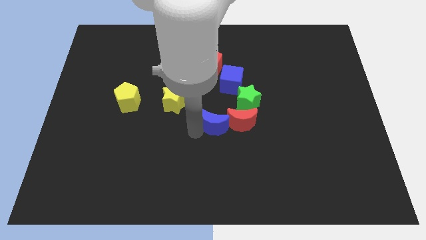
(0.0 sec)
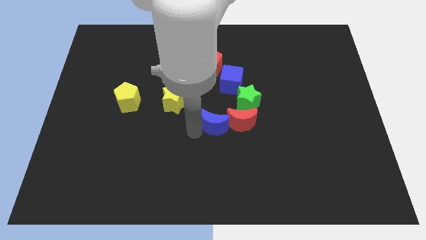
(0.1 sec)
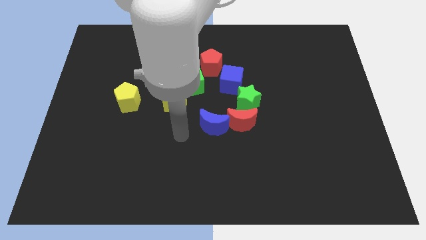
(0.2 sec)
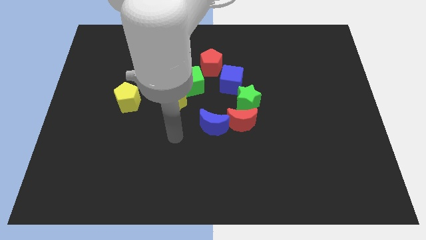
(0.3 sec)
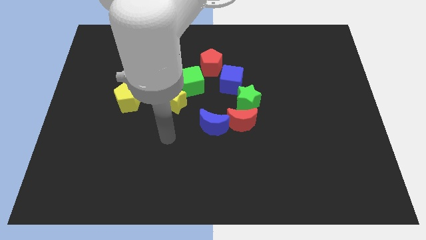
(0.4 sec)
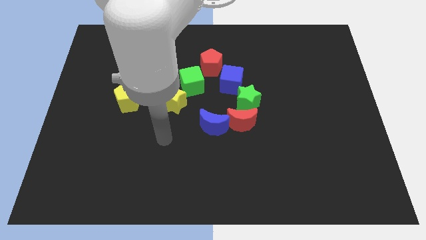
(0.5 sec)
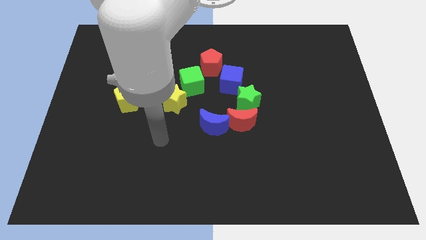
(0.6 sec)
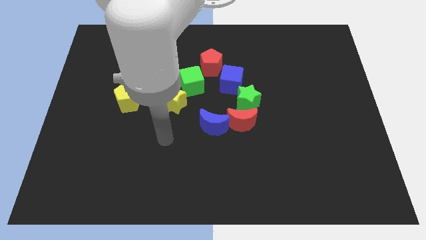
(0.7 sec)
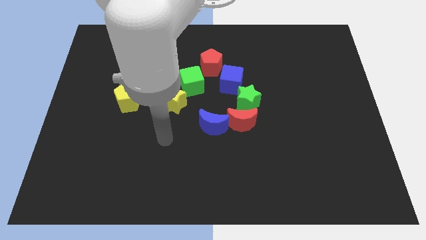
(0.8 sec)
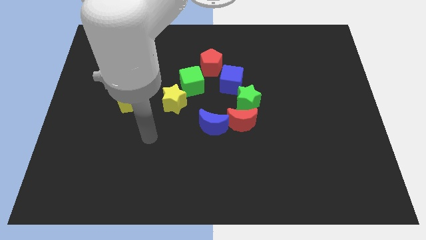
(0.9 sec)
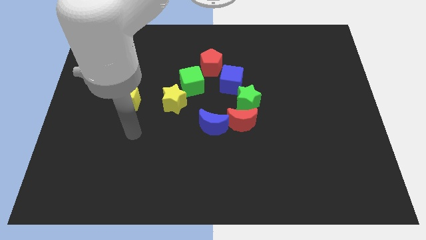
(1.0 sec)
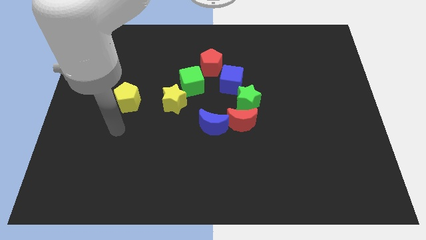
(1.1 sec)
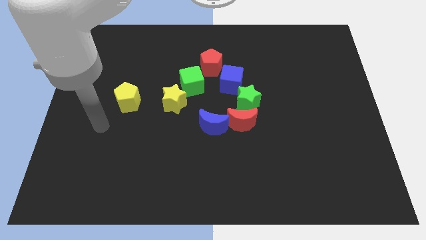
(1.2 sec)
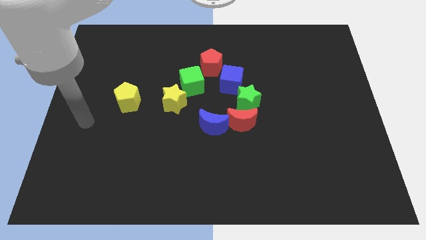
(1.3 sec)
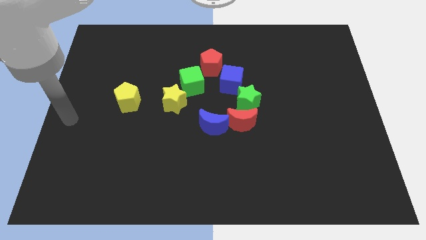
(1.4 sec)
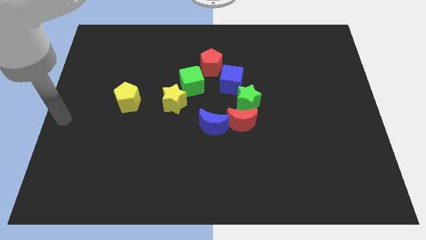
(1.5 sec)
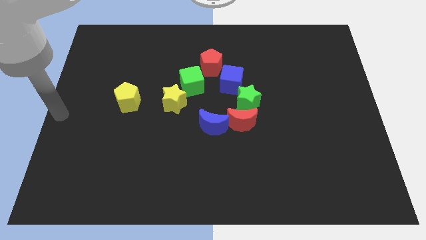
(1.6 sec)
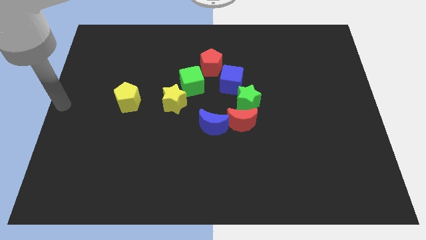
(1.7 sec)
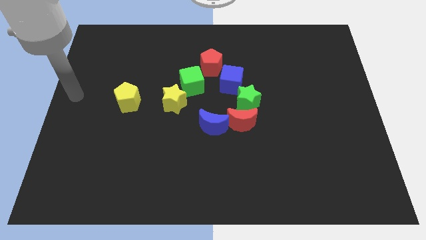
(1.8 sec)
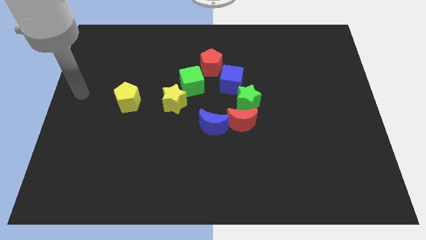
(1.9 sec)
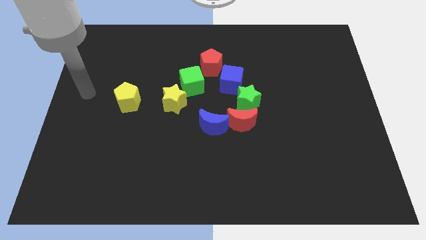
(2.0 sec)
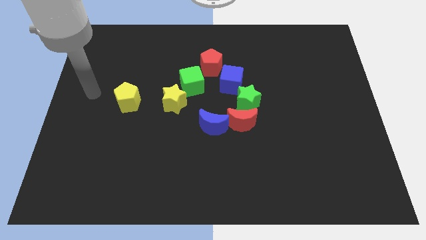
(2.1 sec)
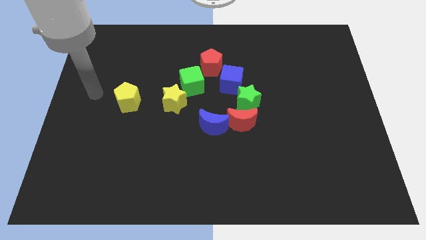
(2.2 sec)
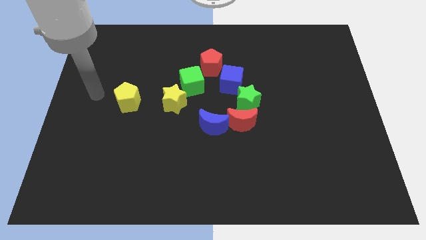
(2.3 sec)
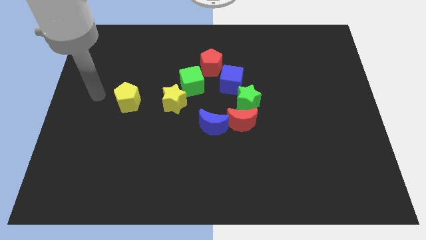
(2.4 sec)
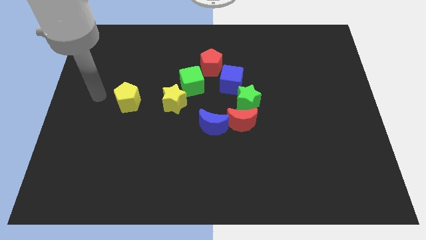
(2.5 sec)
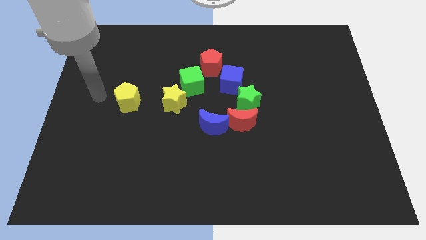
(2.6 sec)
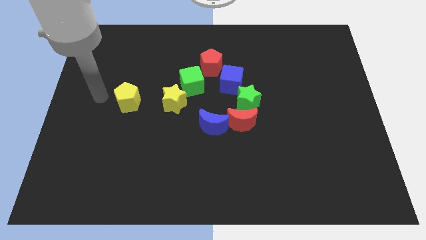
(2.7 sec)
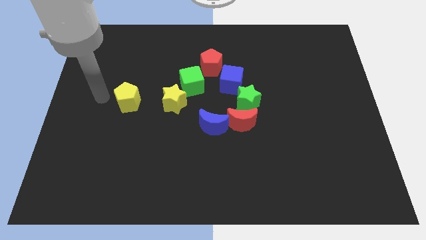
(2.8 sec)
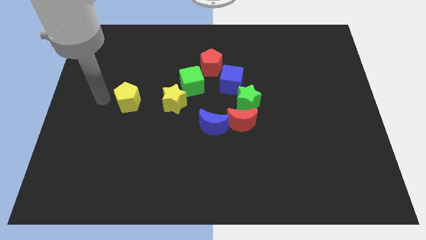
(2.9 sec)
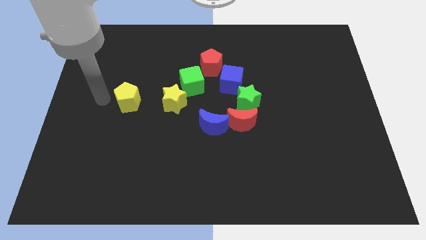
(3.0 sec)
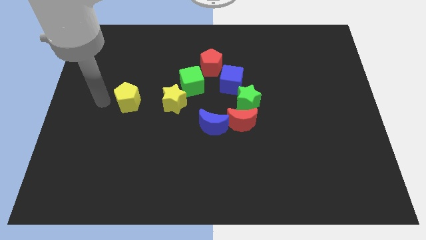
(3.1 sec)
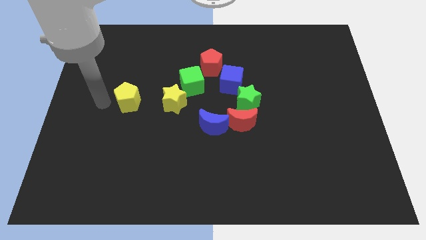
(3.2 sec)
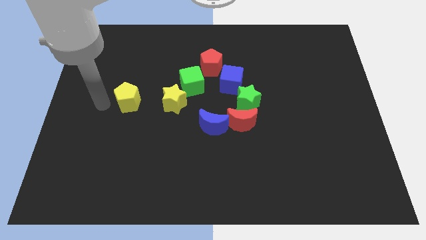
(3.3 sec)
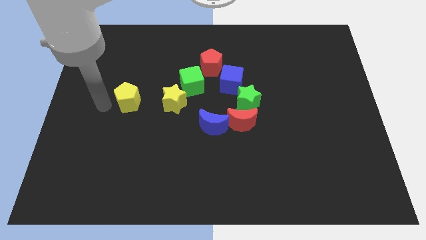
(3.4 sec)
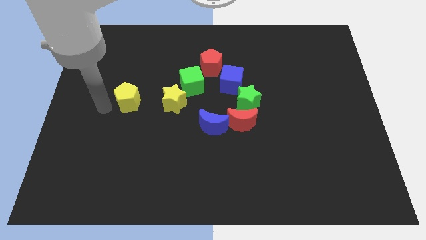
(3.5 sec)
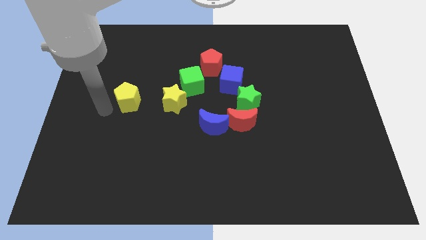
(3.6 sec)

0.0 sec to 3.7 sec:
move your arm away from the blue moon

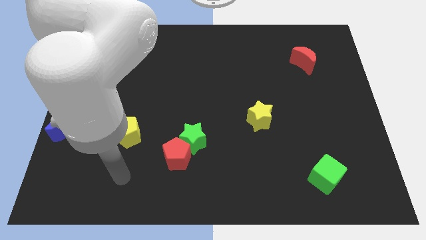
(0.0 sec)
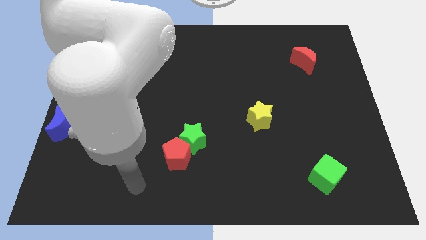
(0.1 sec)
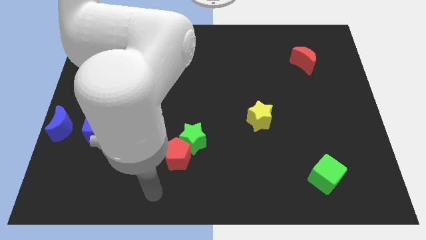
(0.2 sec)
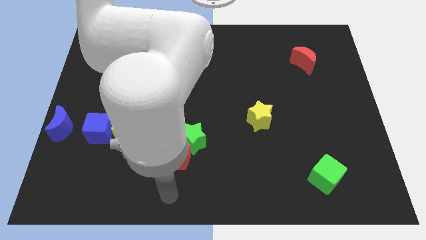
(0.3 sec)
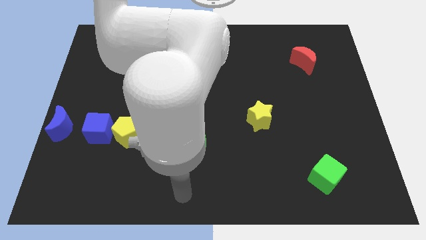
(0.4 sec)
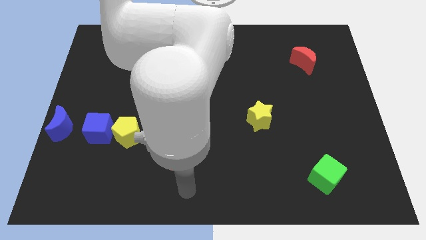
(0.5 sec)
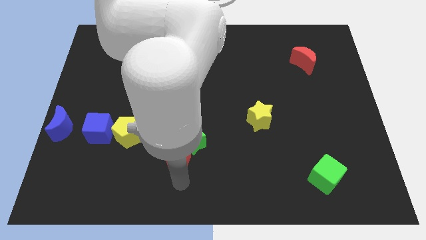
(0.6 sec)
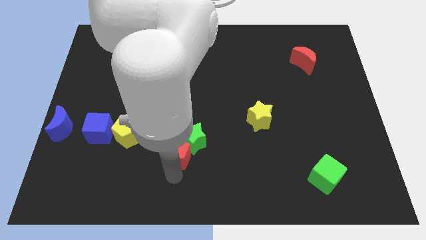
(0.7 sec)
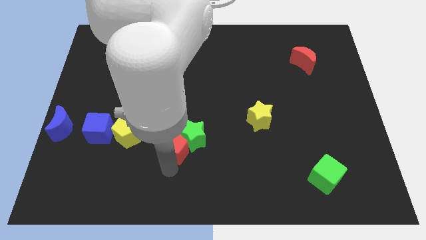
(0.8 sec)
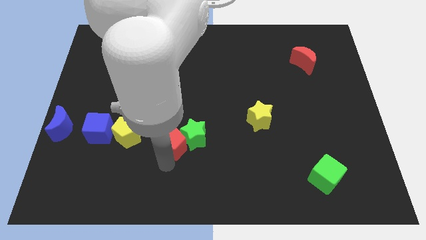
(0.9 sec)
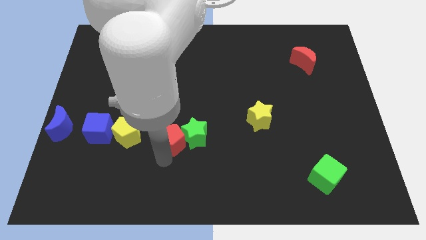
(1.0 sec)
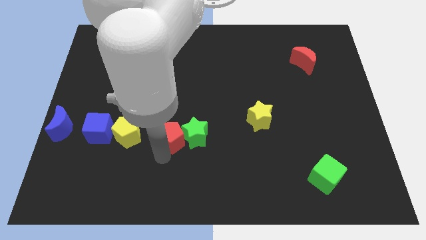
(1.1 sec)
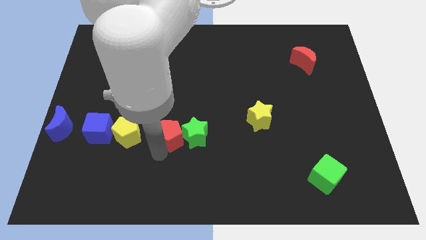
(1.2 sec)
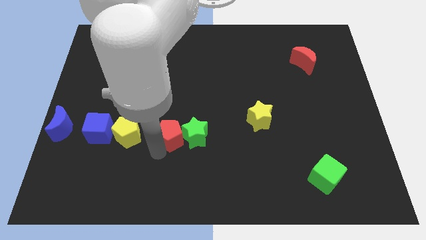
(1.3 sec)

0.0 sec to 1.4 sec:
move the red pentagon in between the yellow pentagon and green star

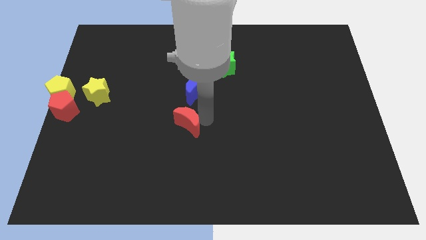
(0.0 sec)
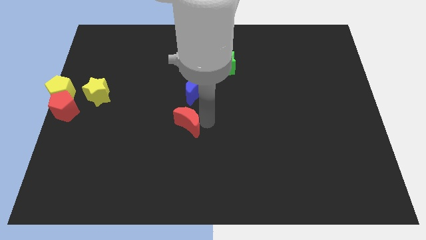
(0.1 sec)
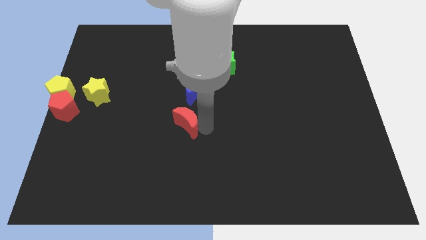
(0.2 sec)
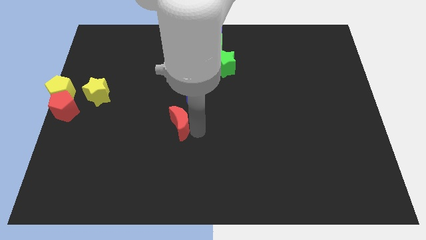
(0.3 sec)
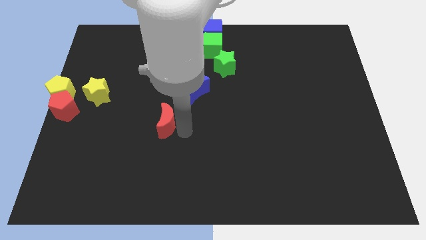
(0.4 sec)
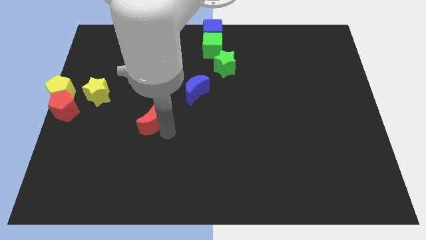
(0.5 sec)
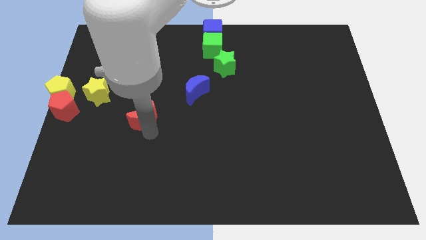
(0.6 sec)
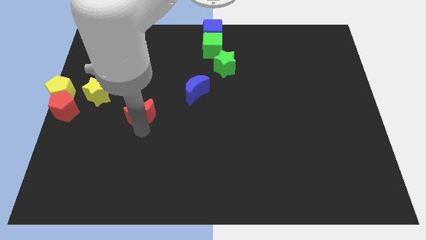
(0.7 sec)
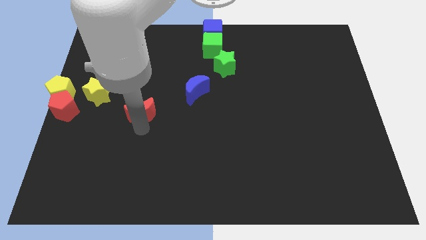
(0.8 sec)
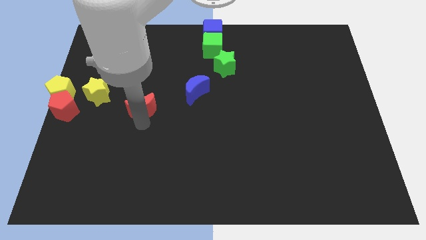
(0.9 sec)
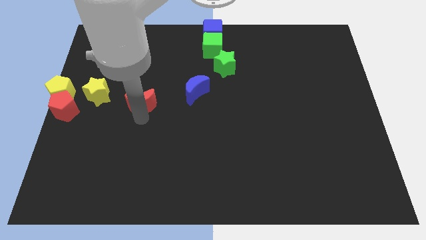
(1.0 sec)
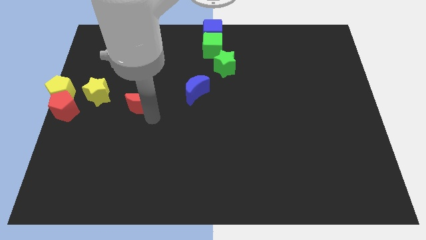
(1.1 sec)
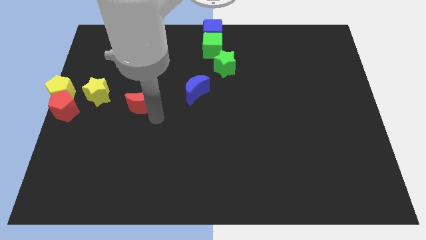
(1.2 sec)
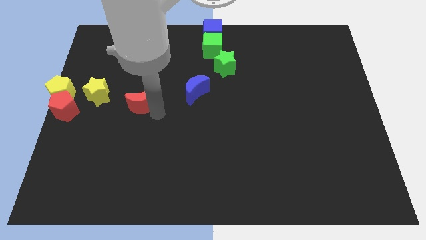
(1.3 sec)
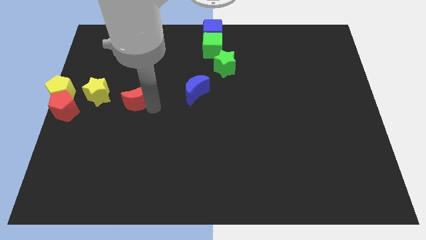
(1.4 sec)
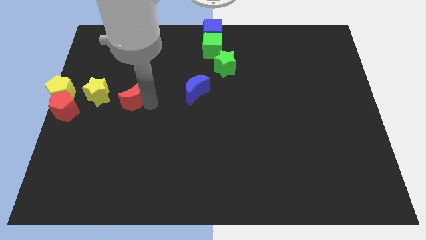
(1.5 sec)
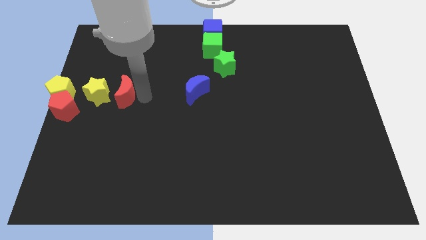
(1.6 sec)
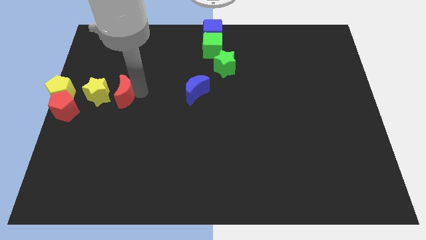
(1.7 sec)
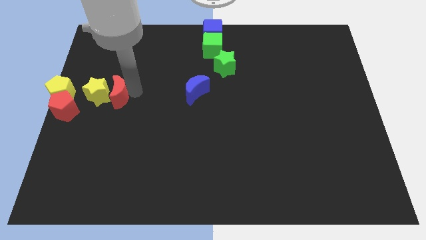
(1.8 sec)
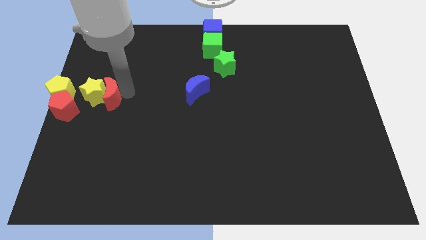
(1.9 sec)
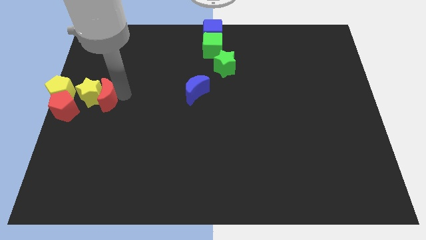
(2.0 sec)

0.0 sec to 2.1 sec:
place the red crescent into the yellow star

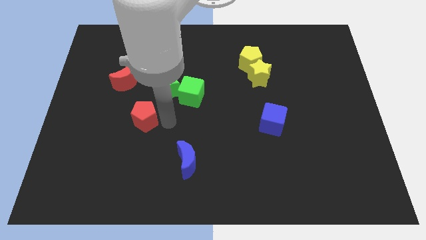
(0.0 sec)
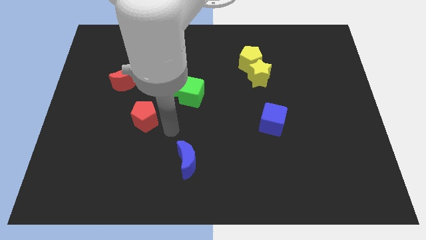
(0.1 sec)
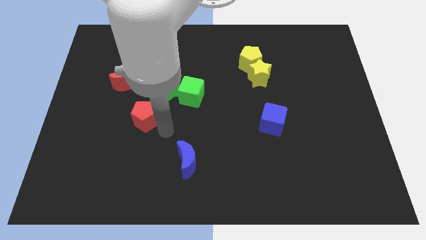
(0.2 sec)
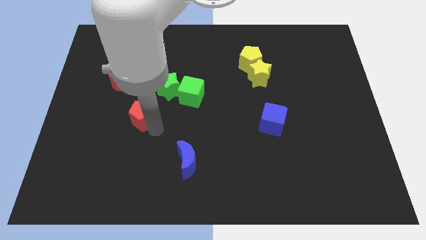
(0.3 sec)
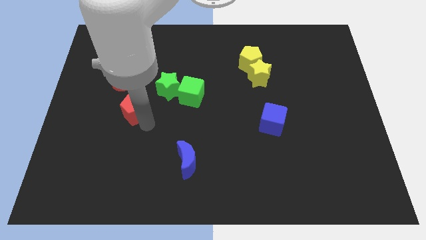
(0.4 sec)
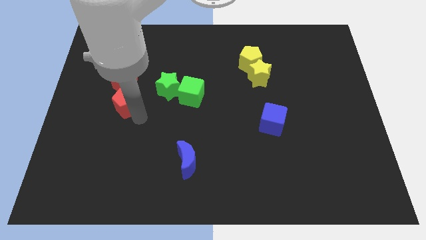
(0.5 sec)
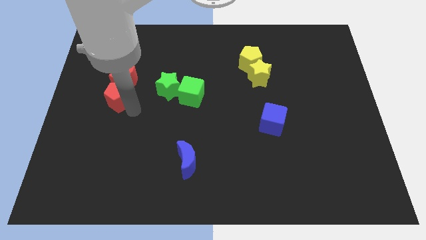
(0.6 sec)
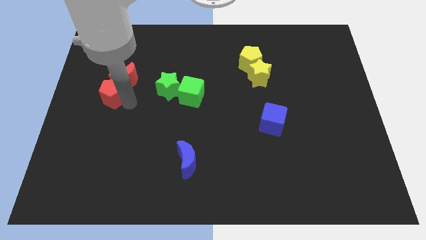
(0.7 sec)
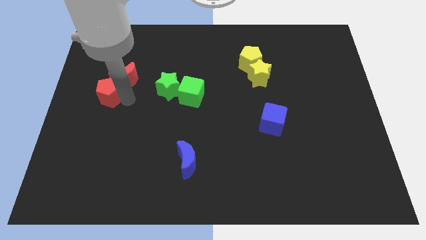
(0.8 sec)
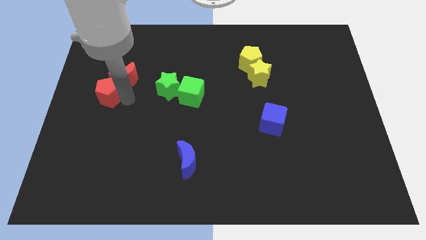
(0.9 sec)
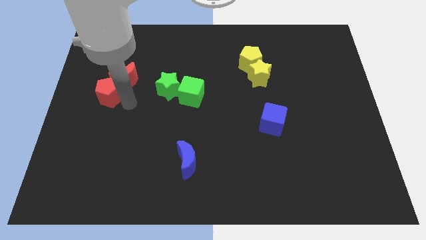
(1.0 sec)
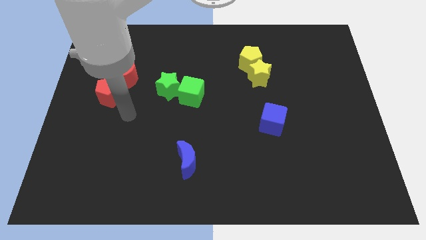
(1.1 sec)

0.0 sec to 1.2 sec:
move the red pentagon into the red moon

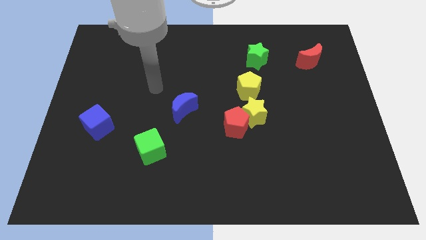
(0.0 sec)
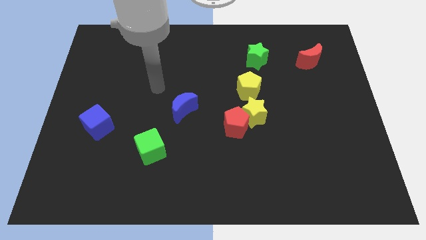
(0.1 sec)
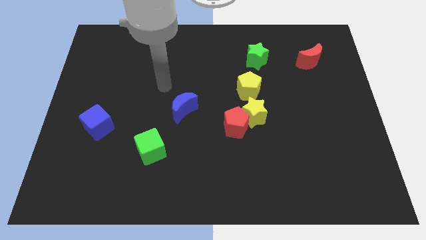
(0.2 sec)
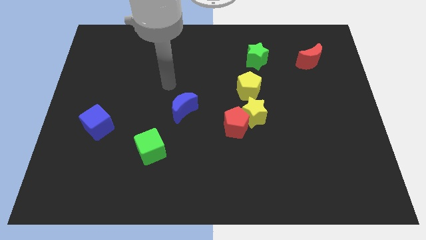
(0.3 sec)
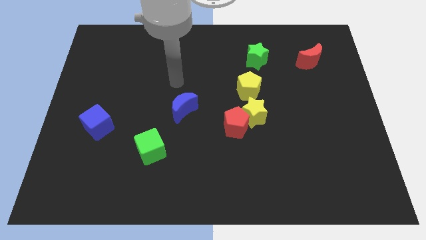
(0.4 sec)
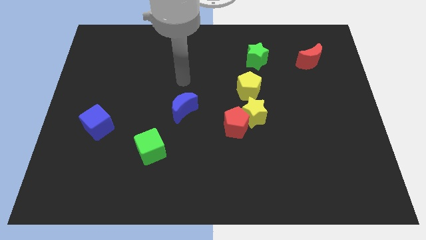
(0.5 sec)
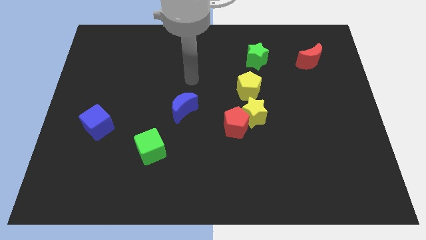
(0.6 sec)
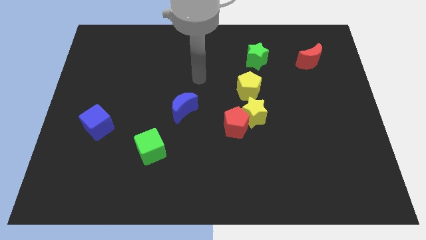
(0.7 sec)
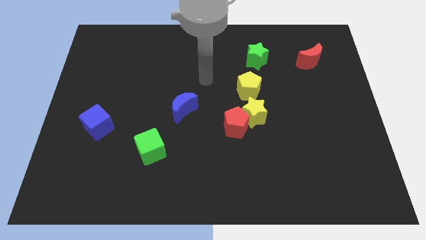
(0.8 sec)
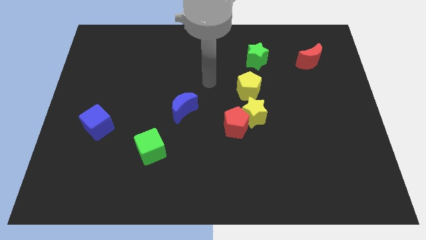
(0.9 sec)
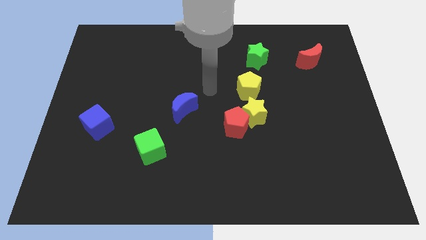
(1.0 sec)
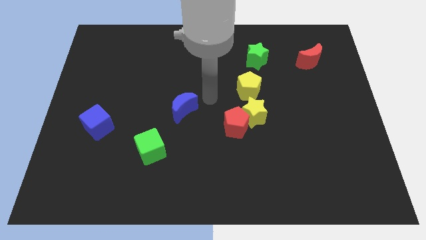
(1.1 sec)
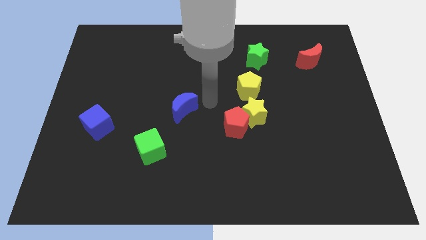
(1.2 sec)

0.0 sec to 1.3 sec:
point your arm at the center of the board
